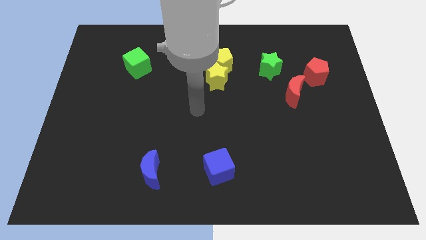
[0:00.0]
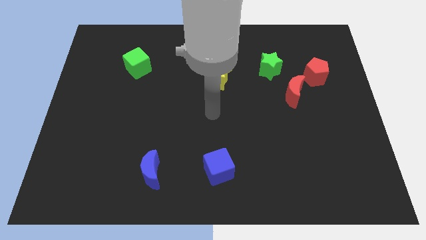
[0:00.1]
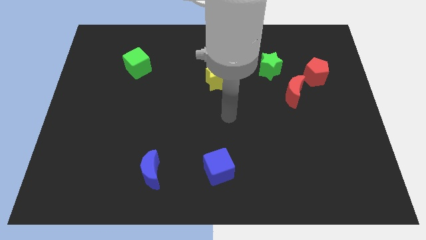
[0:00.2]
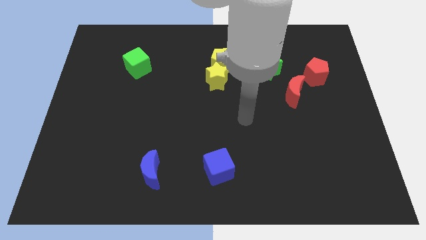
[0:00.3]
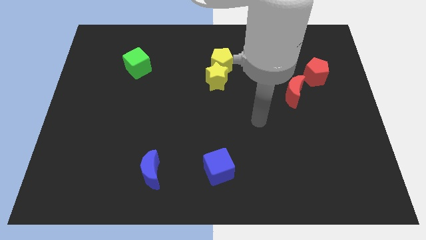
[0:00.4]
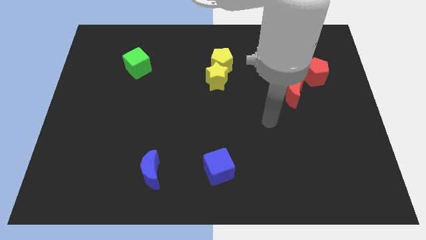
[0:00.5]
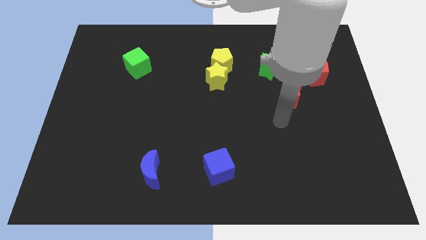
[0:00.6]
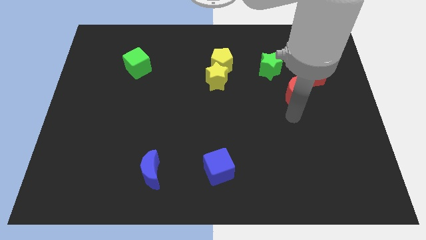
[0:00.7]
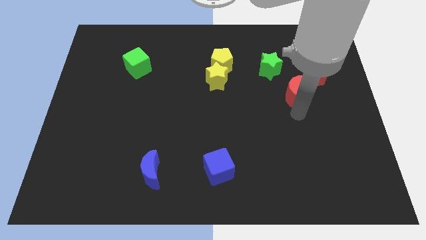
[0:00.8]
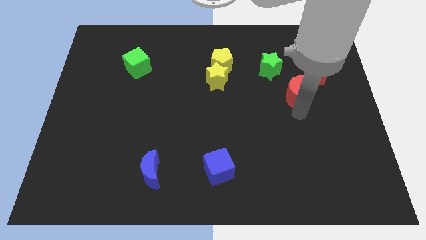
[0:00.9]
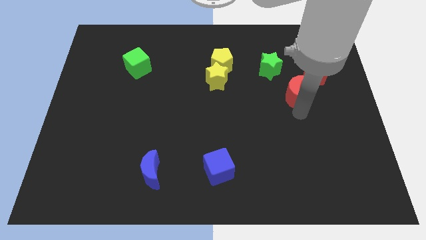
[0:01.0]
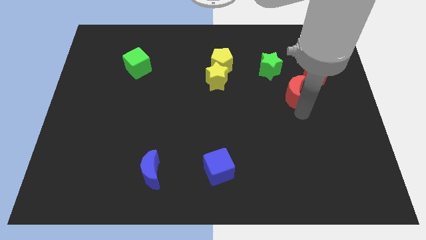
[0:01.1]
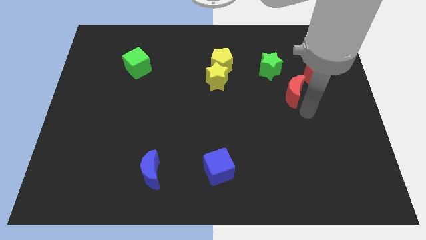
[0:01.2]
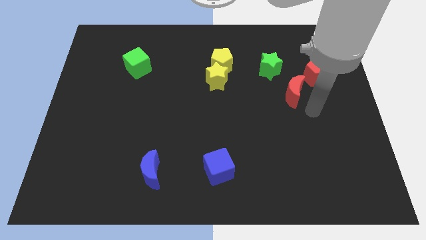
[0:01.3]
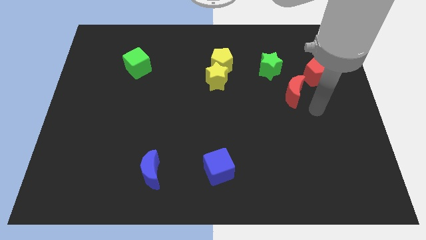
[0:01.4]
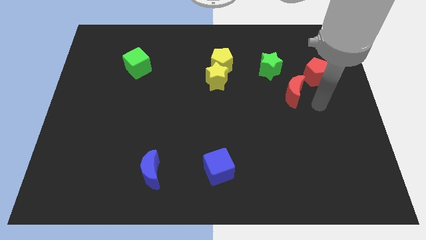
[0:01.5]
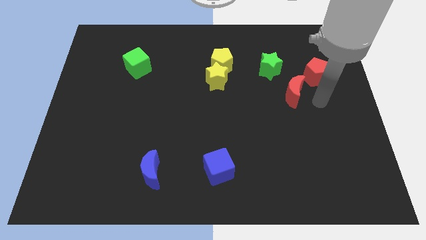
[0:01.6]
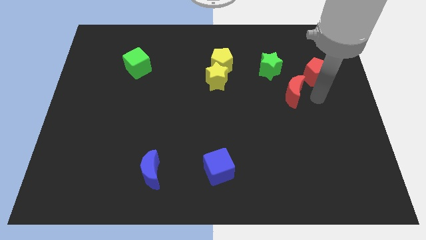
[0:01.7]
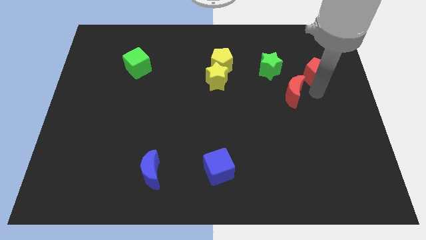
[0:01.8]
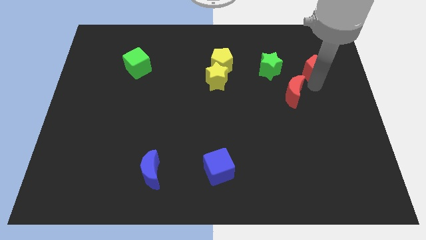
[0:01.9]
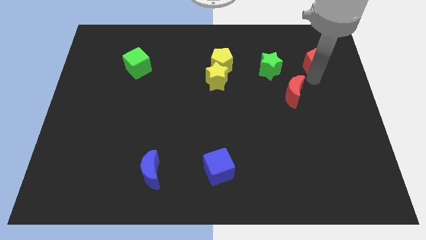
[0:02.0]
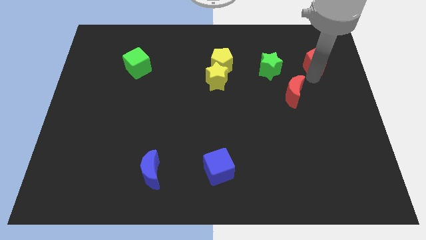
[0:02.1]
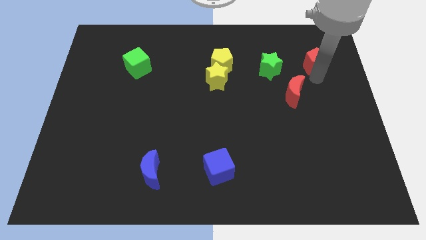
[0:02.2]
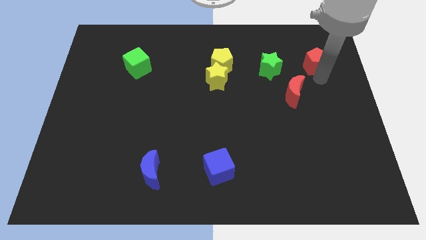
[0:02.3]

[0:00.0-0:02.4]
place your arm at the bottom of the red pentagon

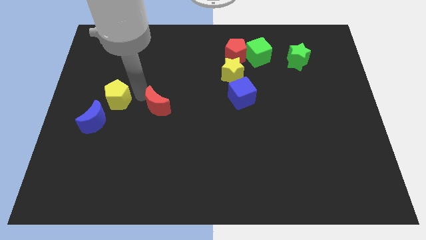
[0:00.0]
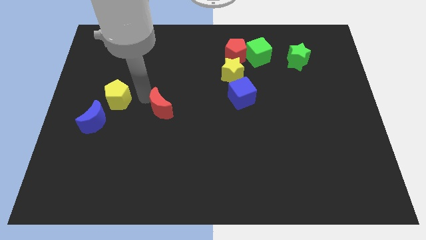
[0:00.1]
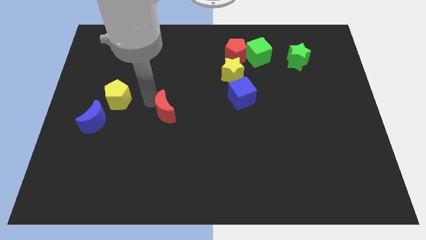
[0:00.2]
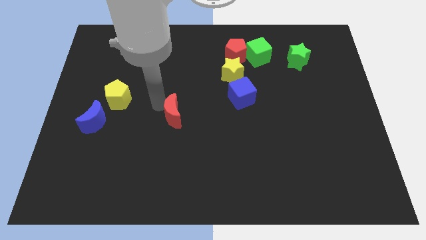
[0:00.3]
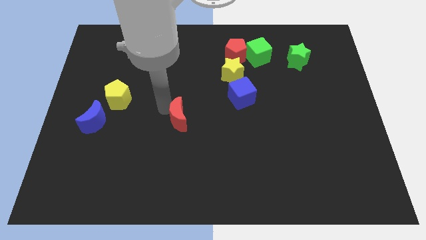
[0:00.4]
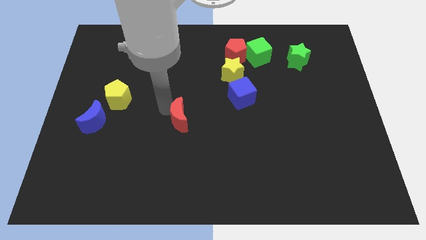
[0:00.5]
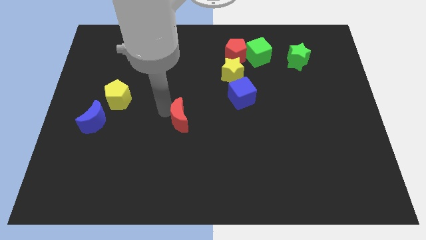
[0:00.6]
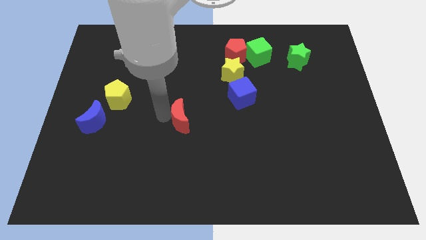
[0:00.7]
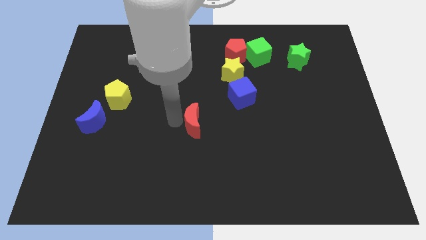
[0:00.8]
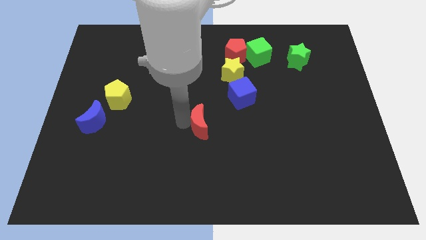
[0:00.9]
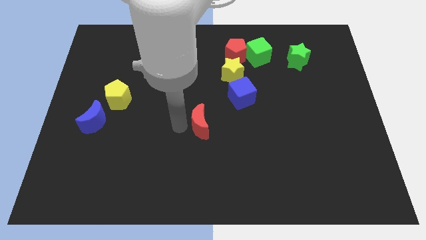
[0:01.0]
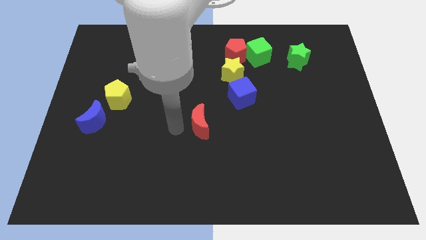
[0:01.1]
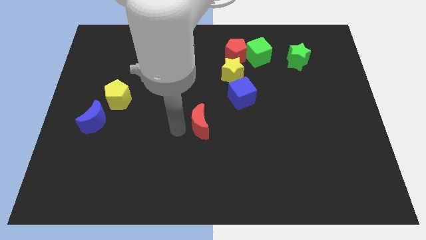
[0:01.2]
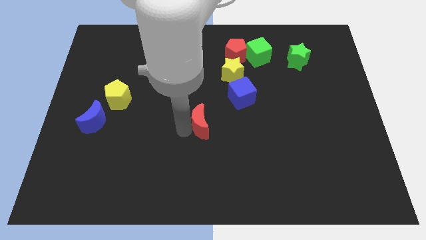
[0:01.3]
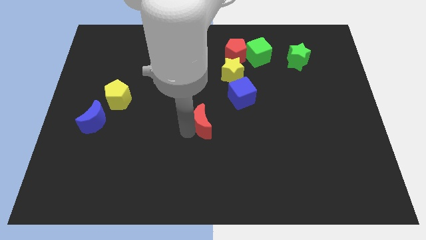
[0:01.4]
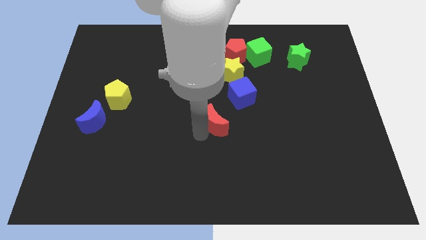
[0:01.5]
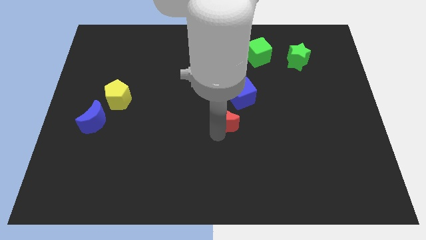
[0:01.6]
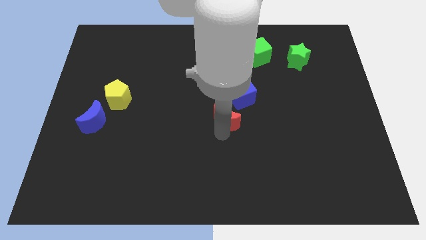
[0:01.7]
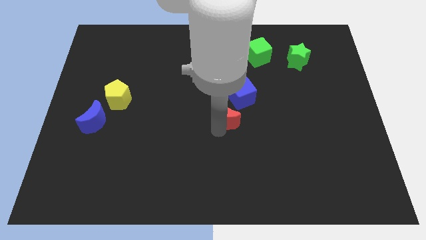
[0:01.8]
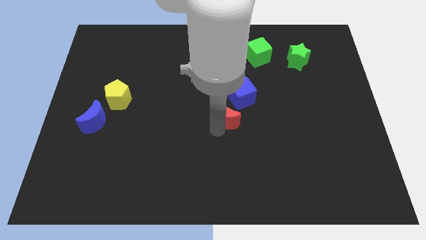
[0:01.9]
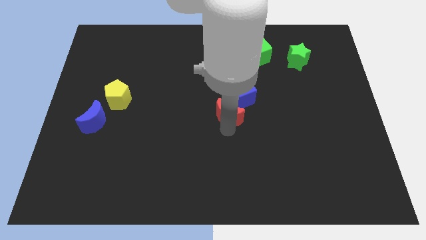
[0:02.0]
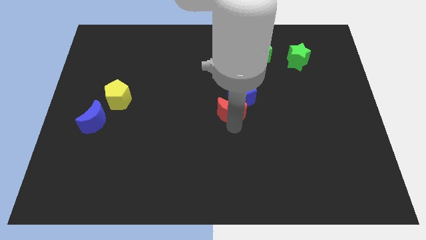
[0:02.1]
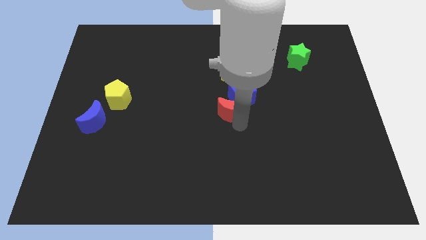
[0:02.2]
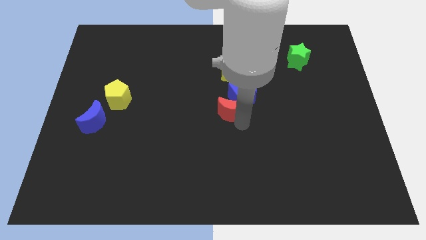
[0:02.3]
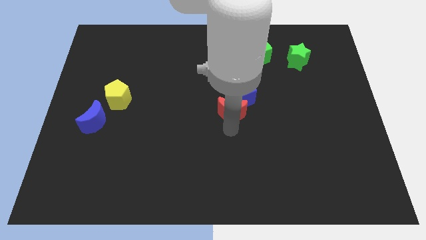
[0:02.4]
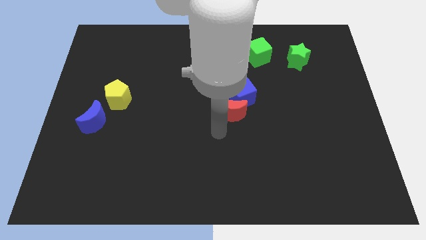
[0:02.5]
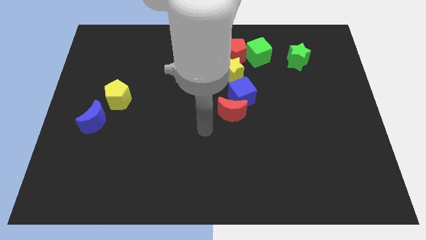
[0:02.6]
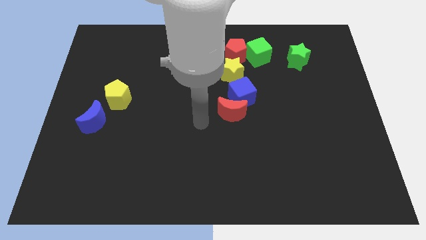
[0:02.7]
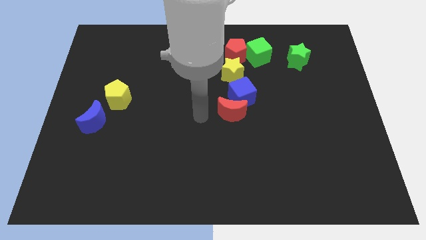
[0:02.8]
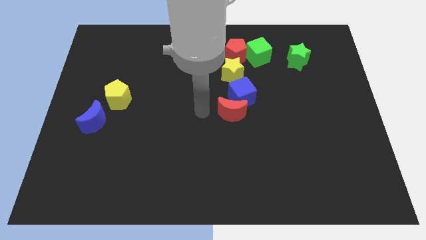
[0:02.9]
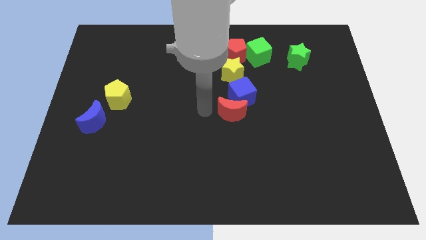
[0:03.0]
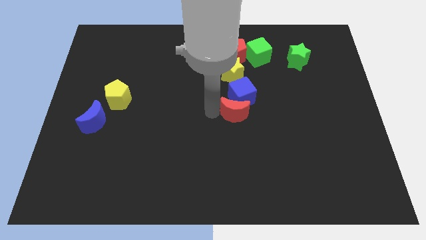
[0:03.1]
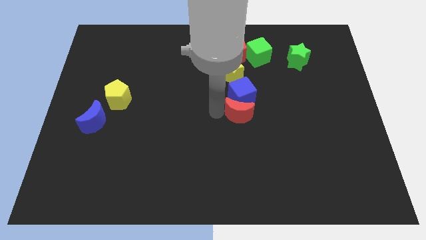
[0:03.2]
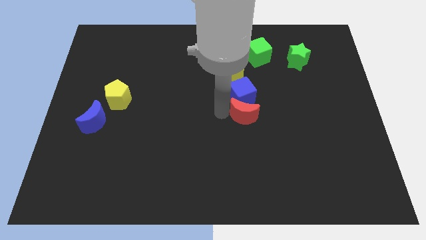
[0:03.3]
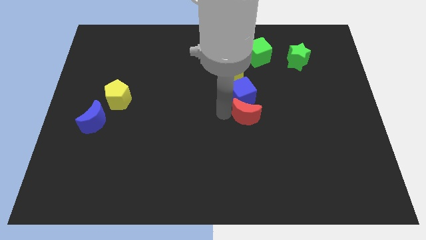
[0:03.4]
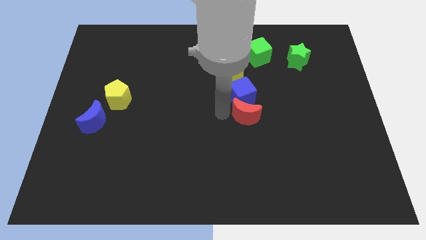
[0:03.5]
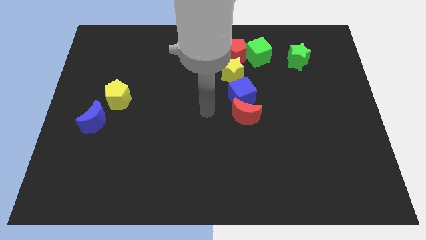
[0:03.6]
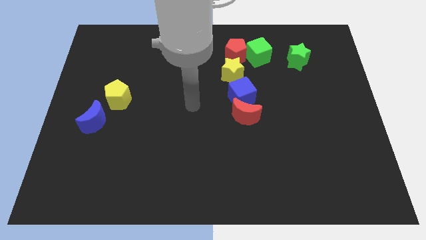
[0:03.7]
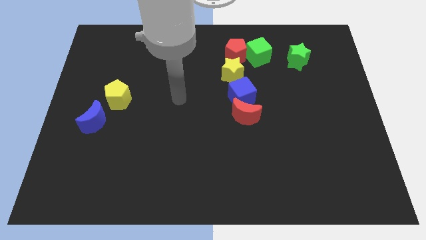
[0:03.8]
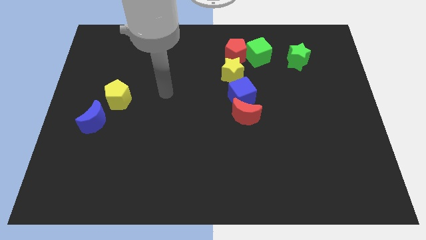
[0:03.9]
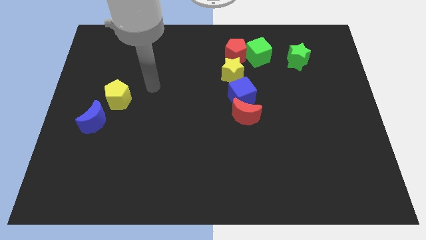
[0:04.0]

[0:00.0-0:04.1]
place the red crescent below the blue cube

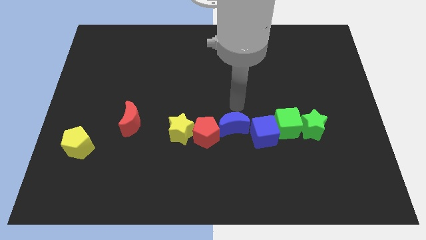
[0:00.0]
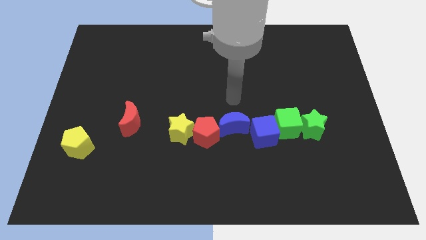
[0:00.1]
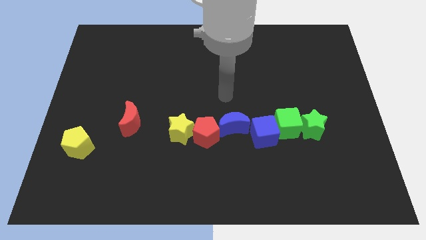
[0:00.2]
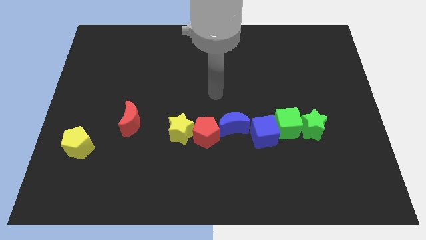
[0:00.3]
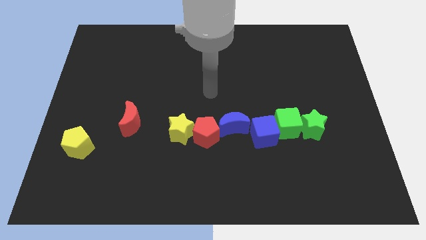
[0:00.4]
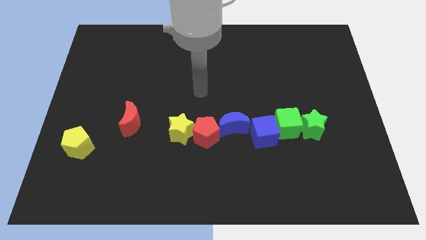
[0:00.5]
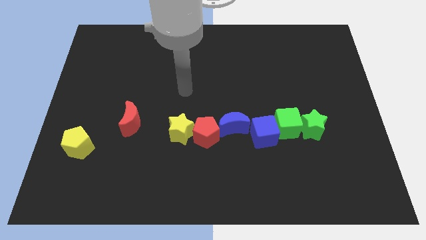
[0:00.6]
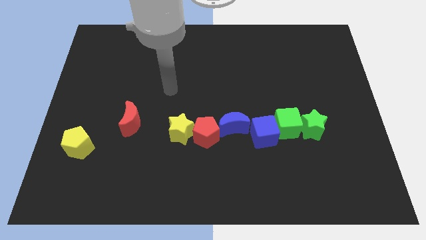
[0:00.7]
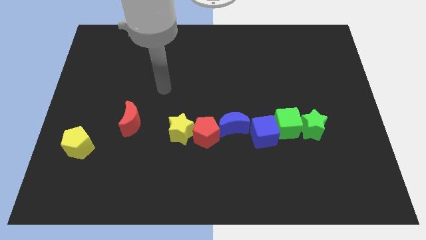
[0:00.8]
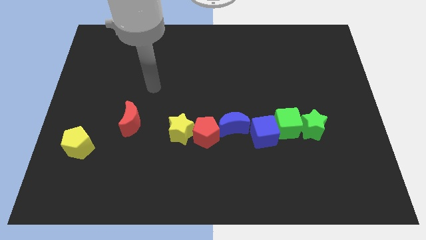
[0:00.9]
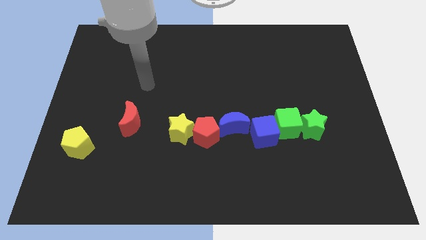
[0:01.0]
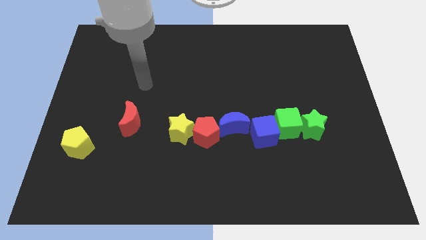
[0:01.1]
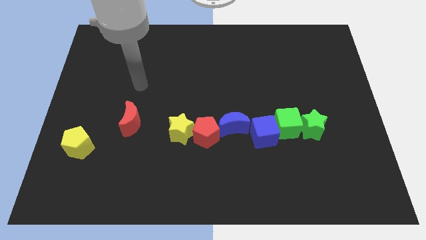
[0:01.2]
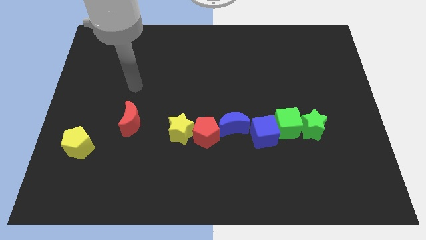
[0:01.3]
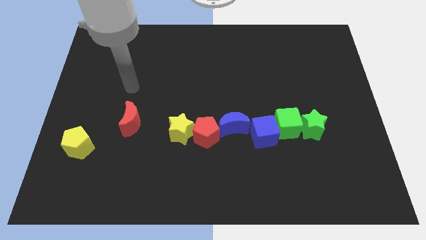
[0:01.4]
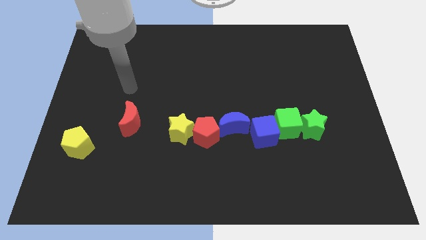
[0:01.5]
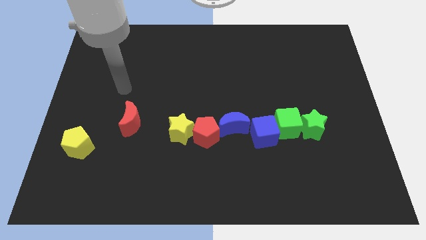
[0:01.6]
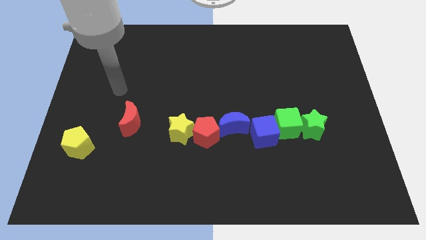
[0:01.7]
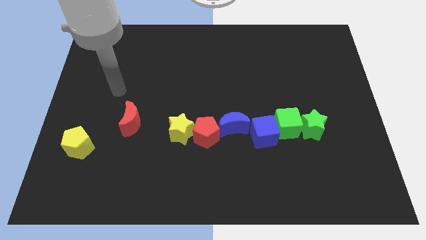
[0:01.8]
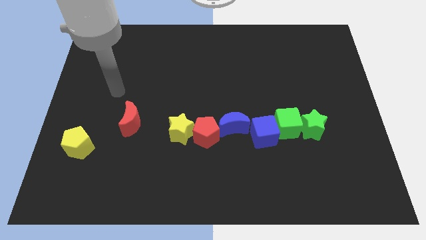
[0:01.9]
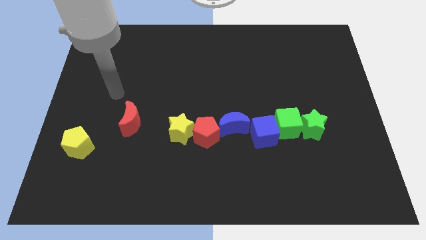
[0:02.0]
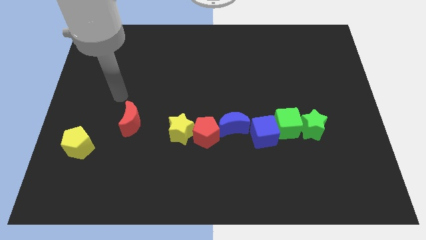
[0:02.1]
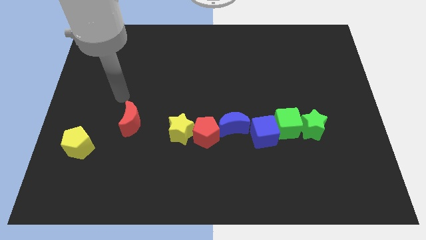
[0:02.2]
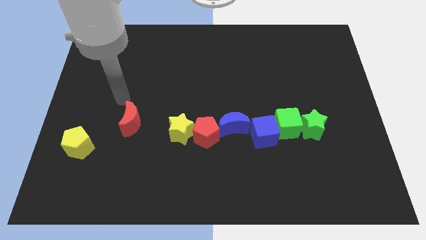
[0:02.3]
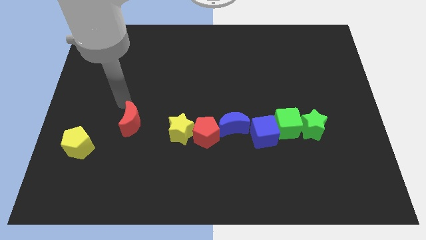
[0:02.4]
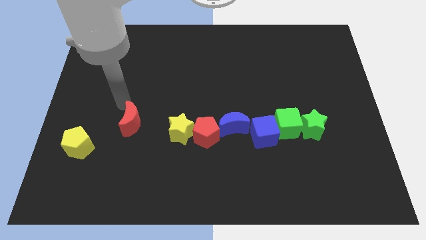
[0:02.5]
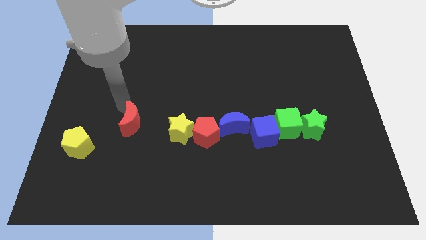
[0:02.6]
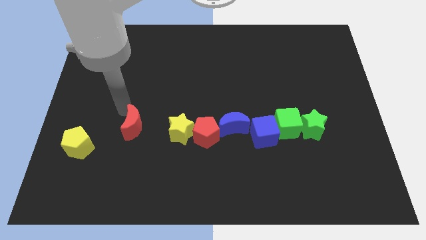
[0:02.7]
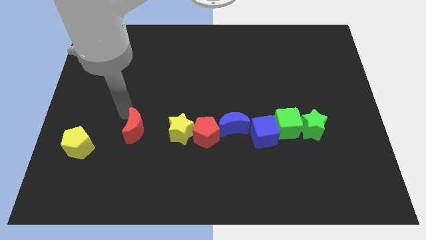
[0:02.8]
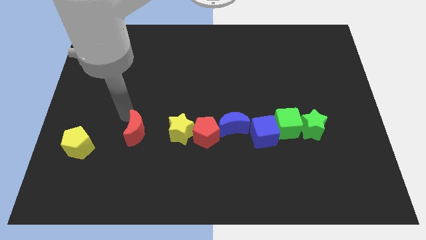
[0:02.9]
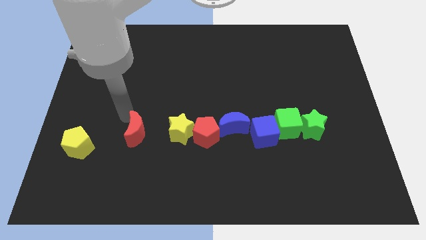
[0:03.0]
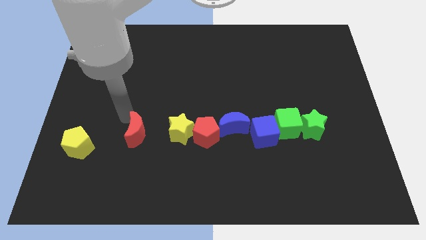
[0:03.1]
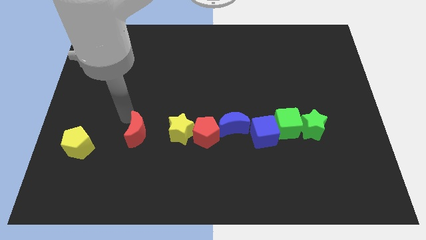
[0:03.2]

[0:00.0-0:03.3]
place the red moon to the left side of the yellow star
